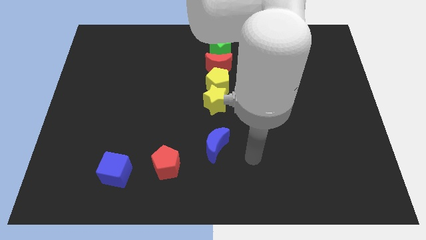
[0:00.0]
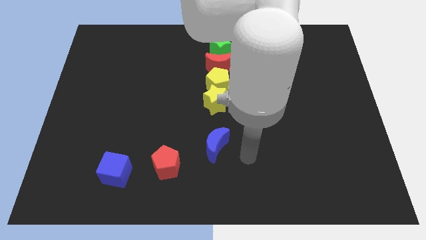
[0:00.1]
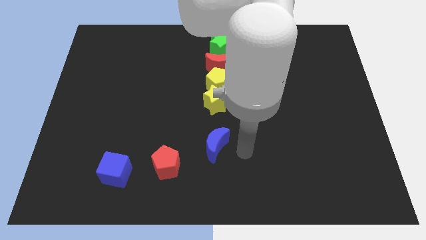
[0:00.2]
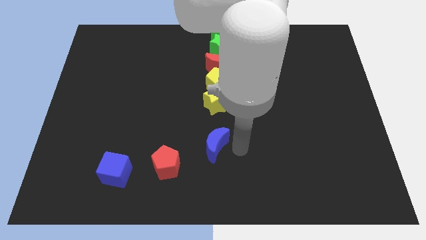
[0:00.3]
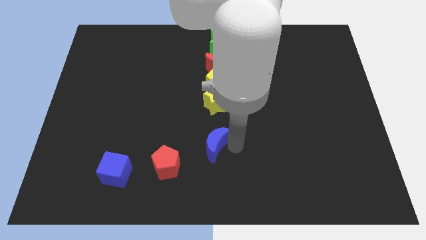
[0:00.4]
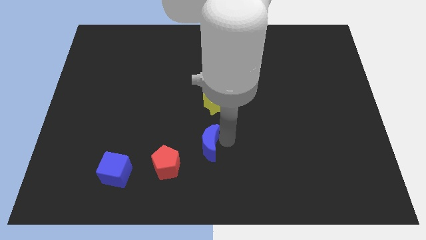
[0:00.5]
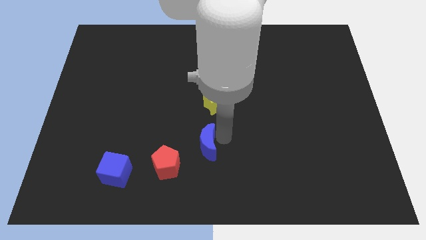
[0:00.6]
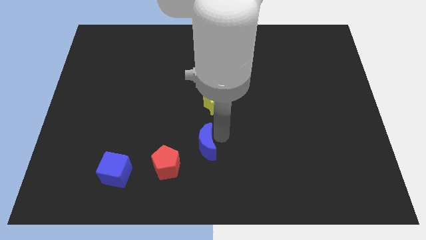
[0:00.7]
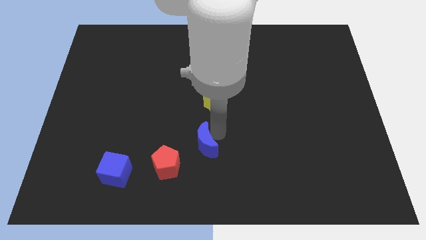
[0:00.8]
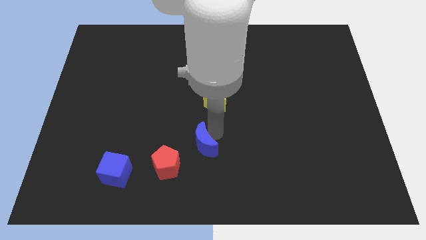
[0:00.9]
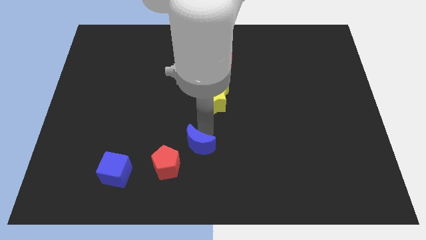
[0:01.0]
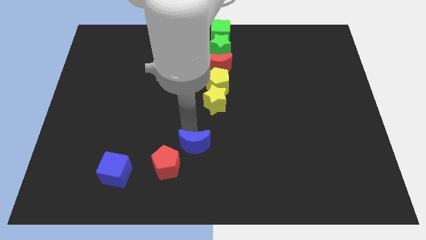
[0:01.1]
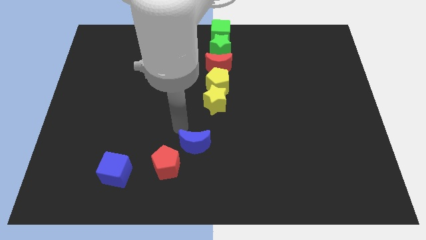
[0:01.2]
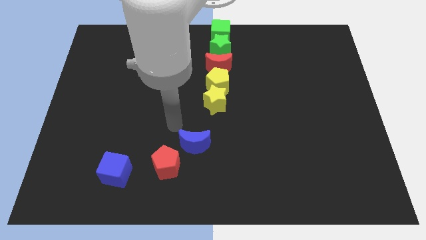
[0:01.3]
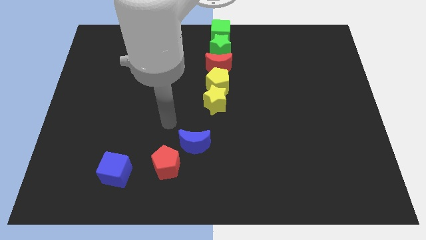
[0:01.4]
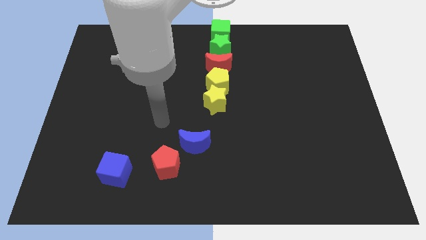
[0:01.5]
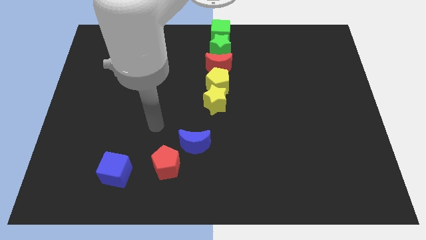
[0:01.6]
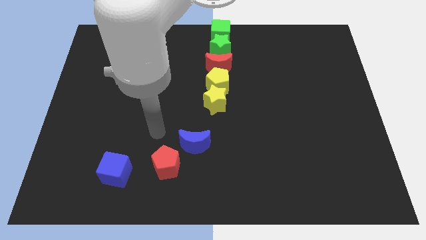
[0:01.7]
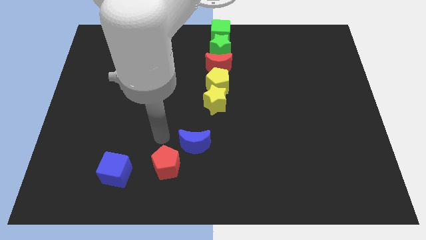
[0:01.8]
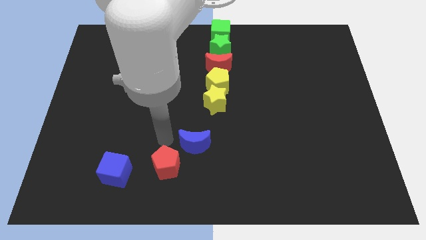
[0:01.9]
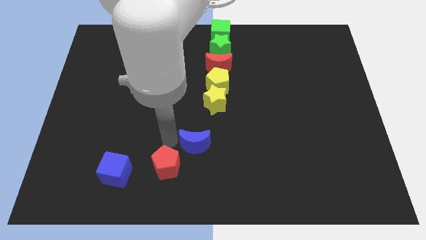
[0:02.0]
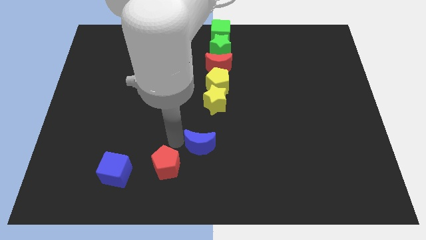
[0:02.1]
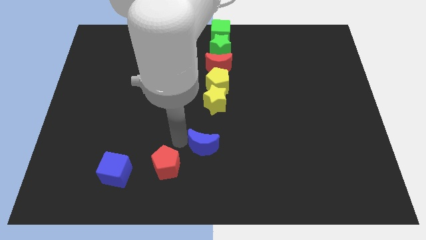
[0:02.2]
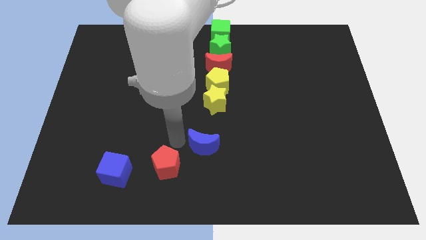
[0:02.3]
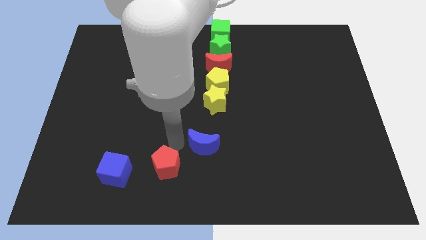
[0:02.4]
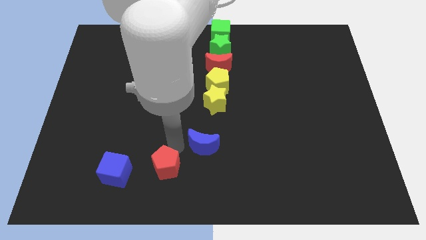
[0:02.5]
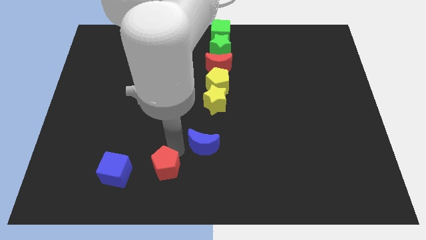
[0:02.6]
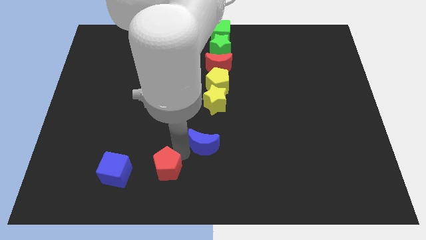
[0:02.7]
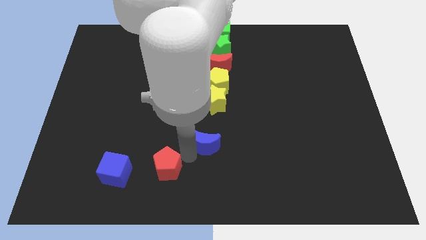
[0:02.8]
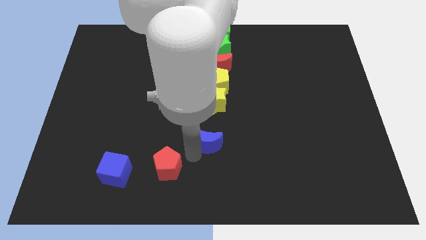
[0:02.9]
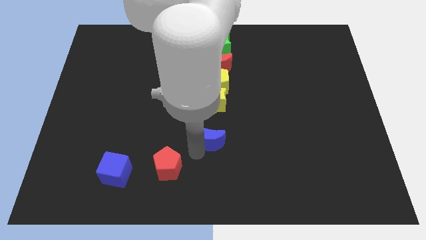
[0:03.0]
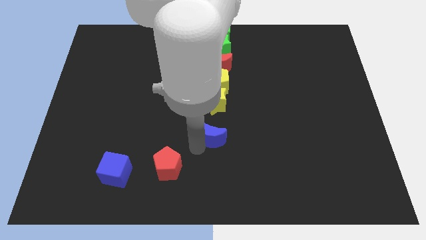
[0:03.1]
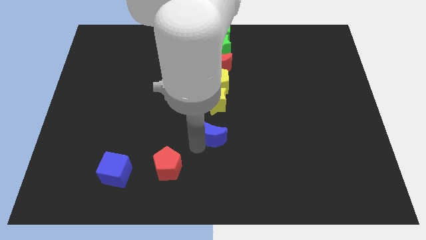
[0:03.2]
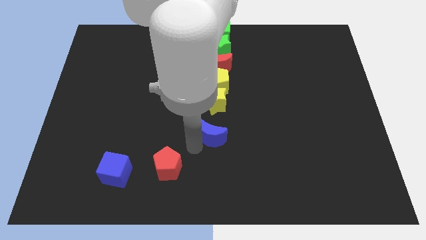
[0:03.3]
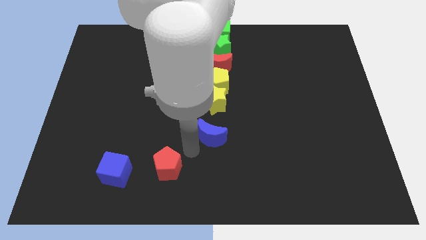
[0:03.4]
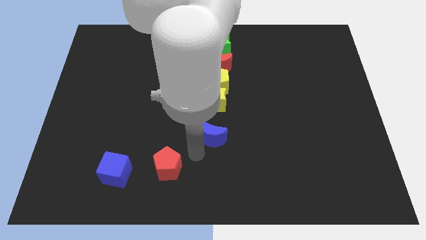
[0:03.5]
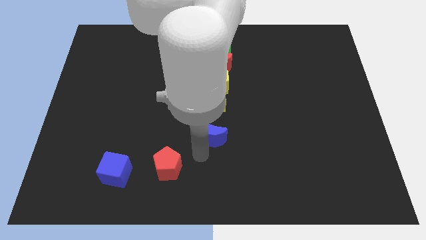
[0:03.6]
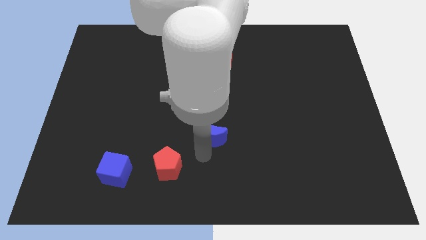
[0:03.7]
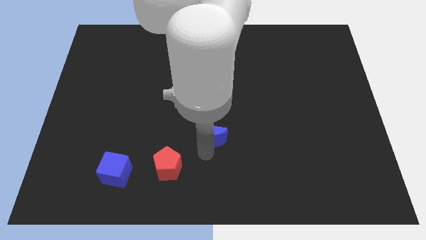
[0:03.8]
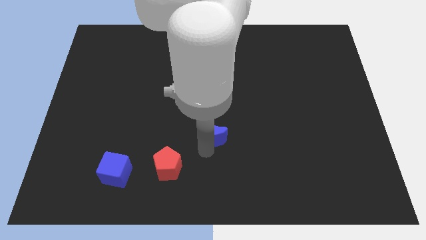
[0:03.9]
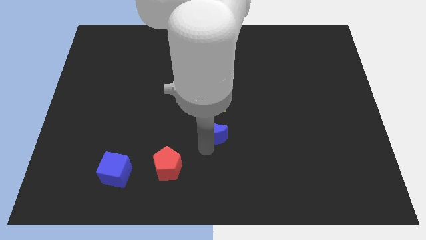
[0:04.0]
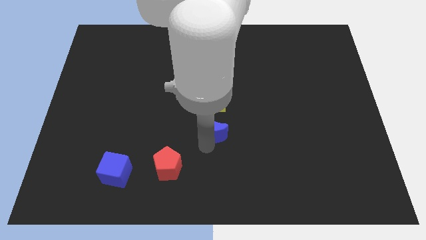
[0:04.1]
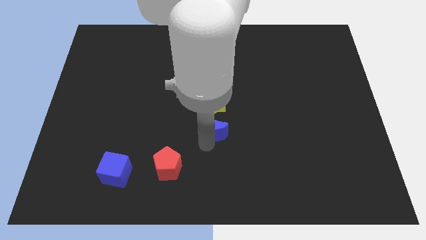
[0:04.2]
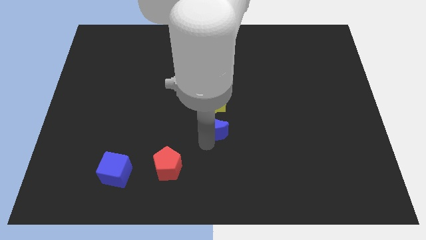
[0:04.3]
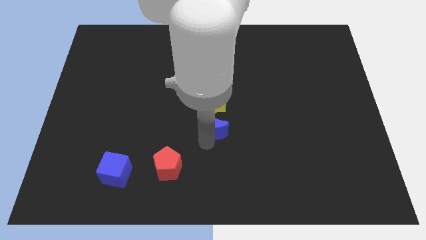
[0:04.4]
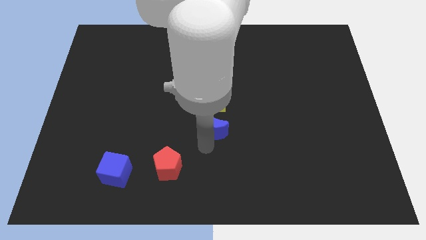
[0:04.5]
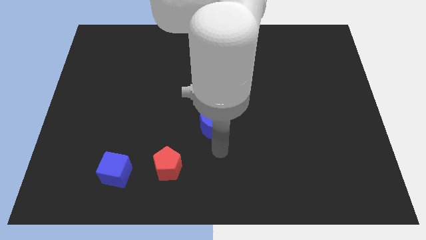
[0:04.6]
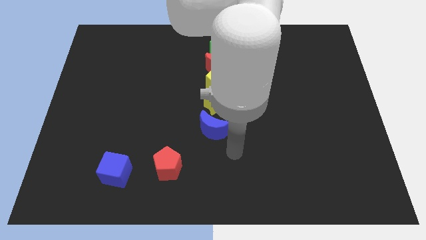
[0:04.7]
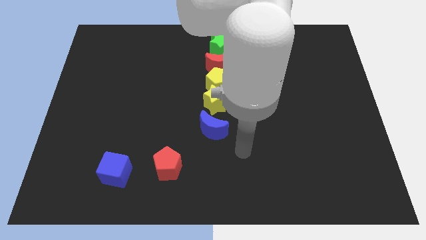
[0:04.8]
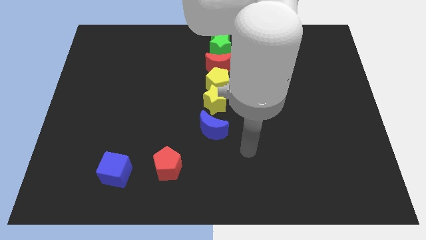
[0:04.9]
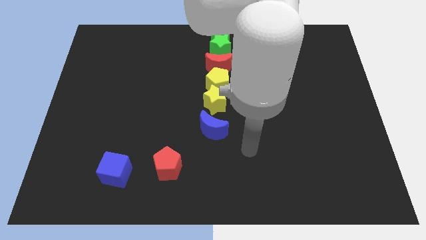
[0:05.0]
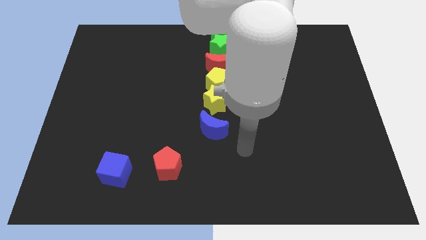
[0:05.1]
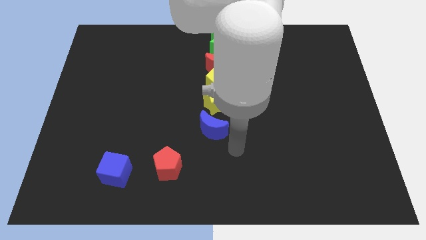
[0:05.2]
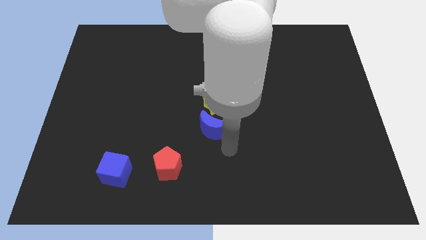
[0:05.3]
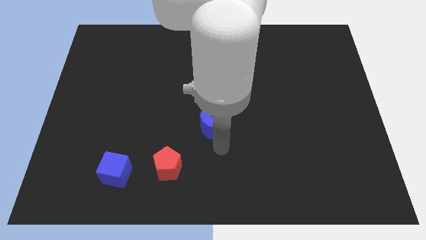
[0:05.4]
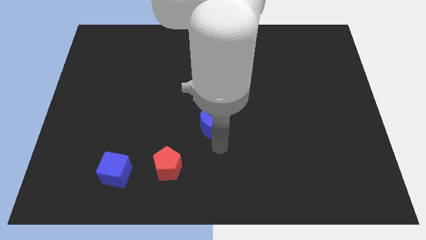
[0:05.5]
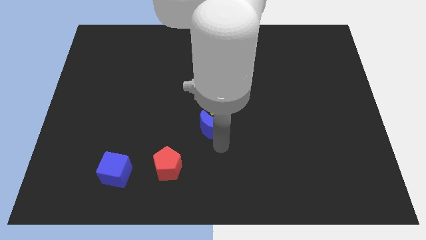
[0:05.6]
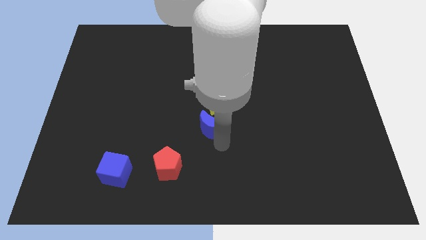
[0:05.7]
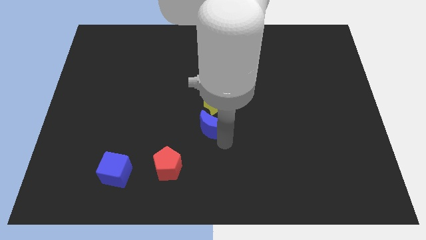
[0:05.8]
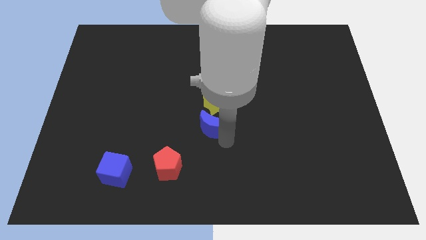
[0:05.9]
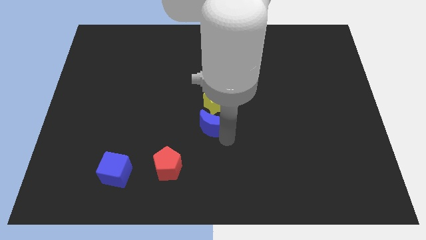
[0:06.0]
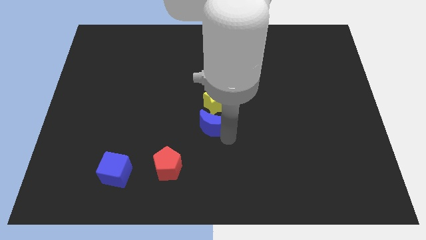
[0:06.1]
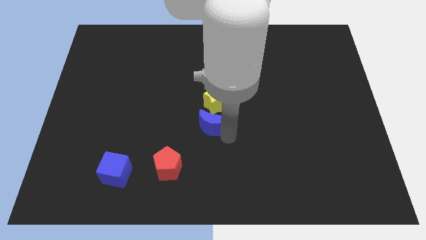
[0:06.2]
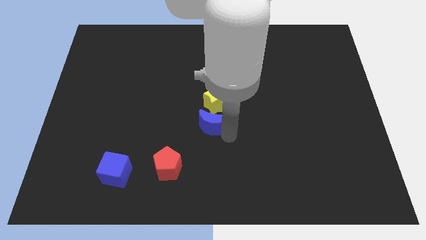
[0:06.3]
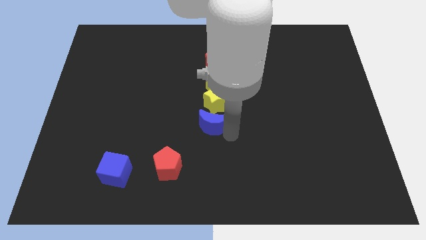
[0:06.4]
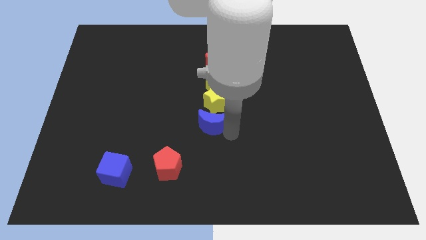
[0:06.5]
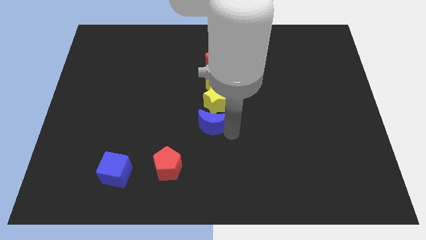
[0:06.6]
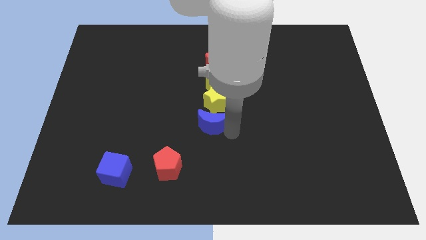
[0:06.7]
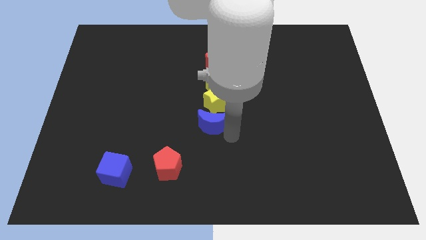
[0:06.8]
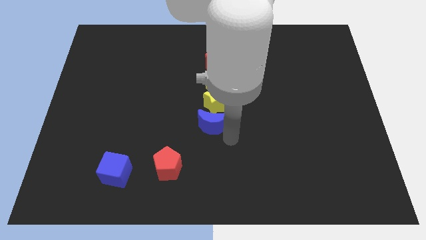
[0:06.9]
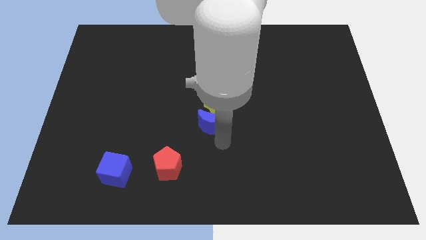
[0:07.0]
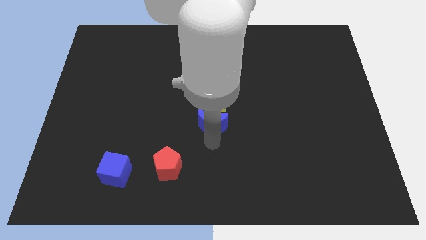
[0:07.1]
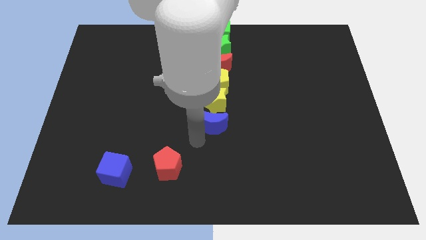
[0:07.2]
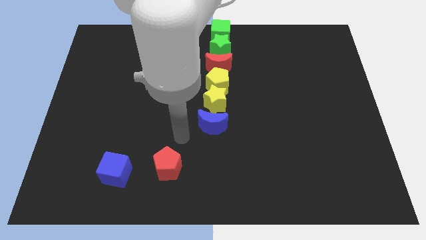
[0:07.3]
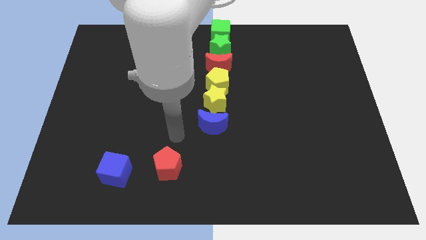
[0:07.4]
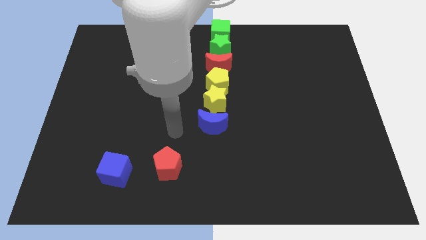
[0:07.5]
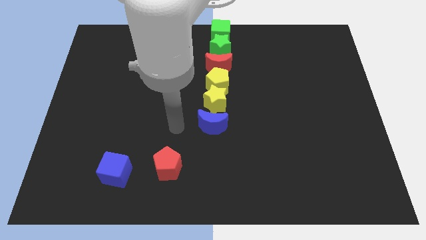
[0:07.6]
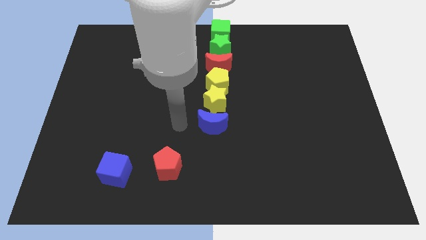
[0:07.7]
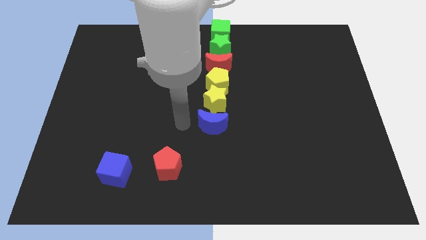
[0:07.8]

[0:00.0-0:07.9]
push the blue moon into the yellow star

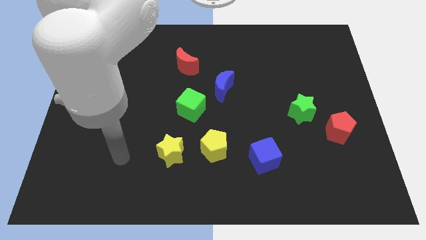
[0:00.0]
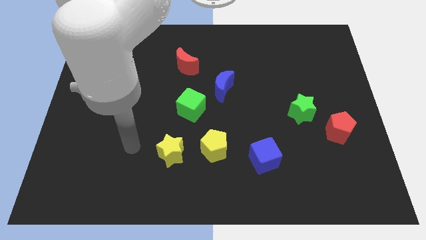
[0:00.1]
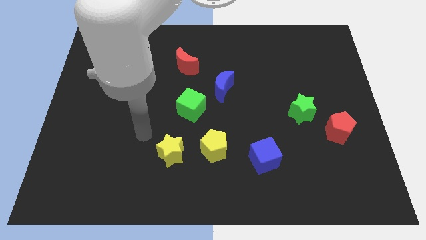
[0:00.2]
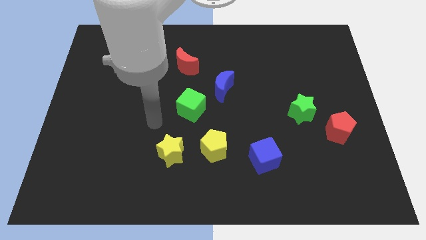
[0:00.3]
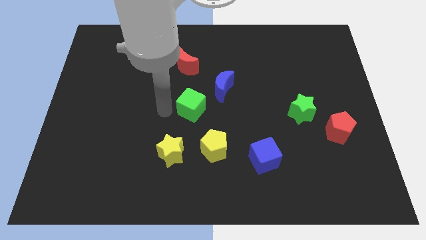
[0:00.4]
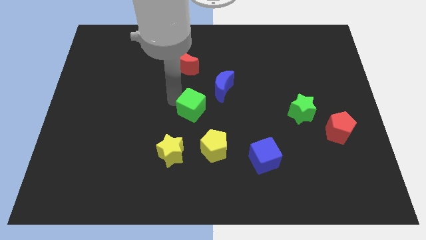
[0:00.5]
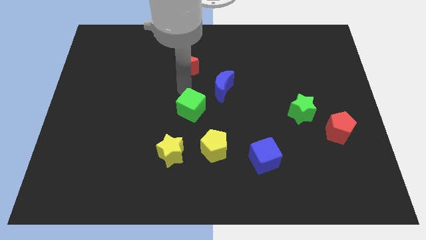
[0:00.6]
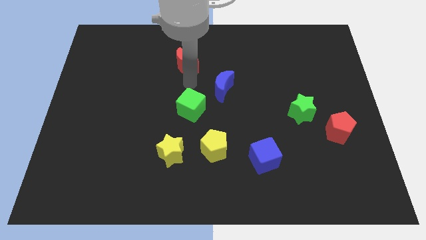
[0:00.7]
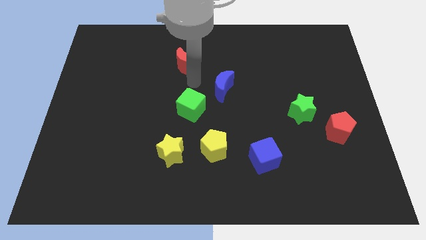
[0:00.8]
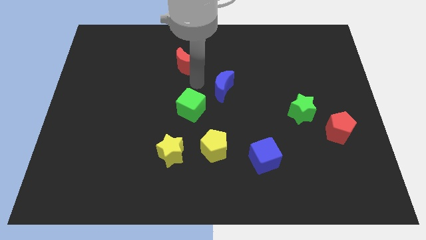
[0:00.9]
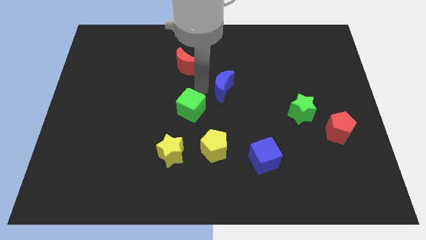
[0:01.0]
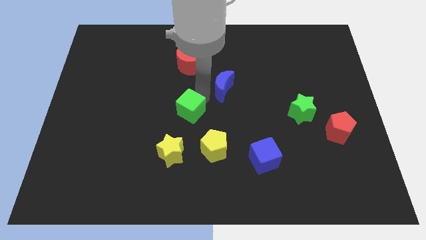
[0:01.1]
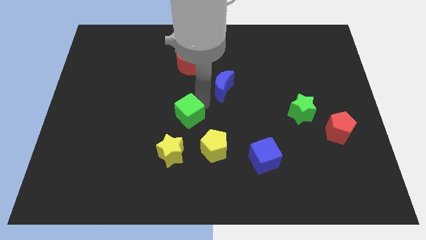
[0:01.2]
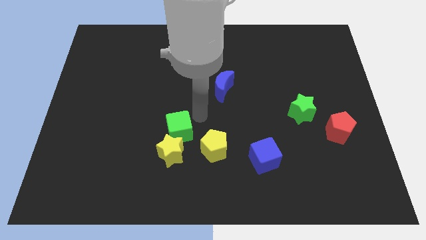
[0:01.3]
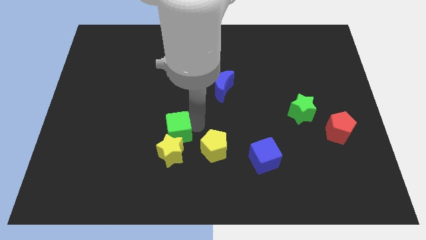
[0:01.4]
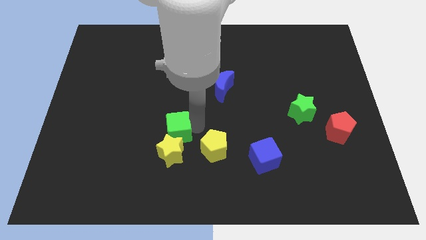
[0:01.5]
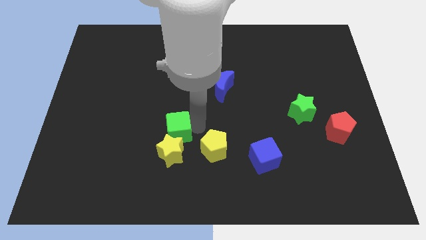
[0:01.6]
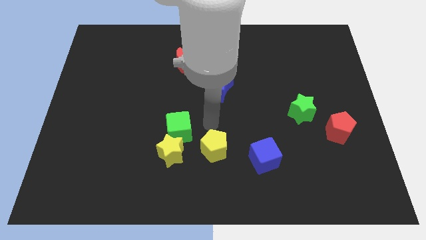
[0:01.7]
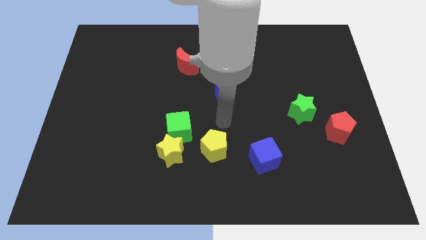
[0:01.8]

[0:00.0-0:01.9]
move the green cube close to the yellow star
